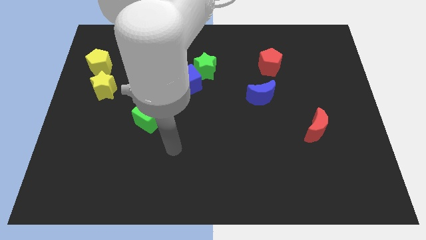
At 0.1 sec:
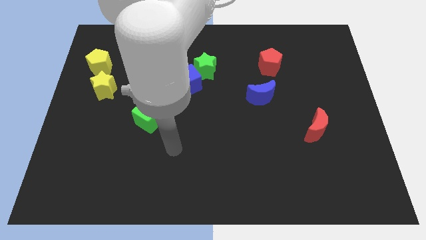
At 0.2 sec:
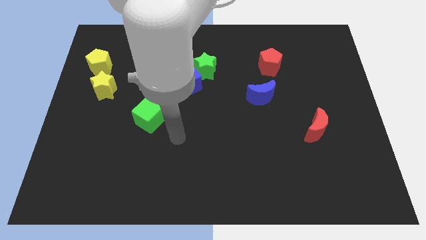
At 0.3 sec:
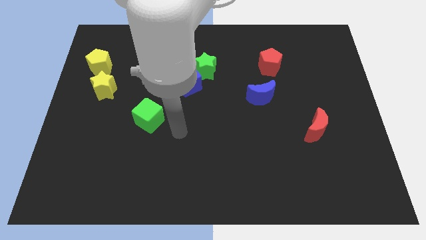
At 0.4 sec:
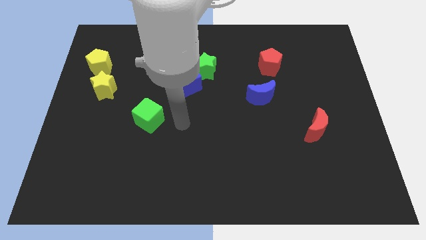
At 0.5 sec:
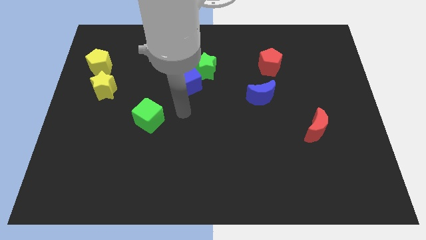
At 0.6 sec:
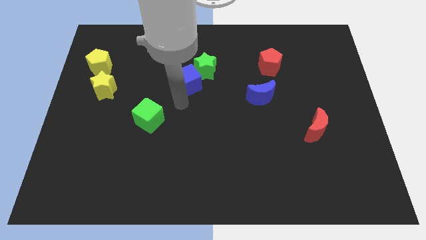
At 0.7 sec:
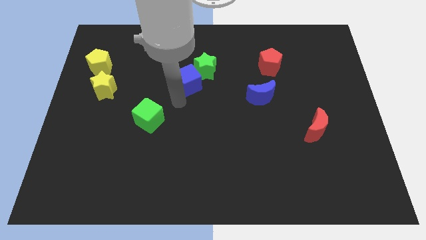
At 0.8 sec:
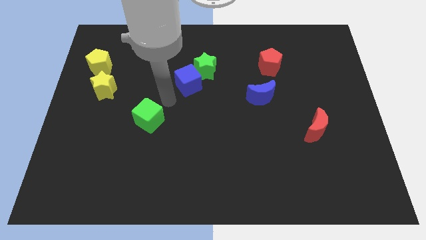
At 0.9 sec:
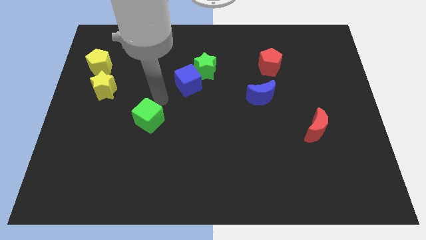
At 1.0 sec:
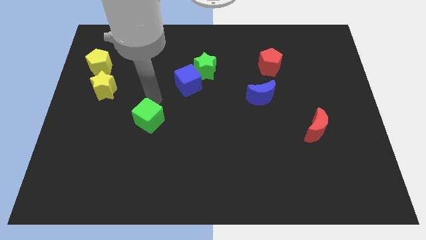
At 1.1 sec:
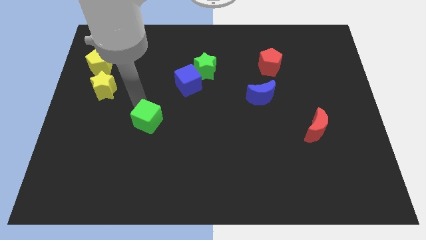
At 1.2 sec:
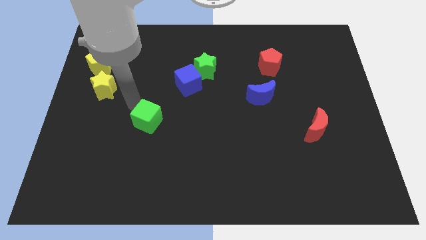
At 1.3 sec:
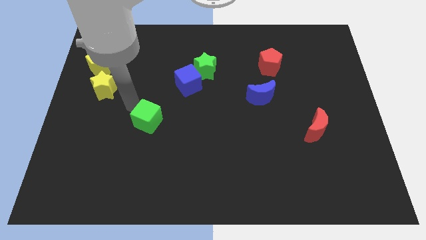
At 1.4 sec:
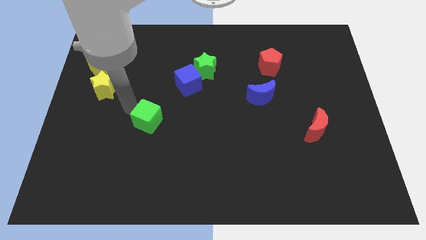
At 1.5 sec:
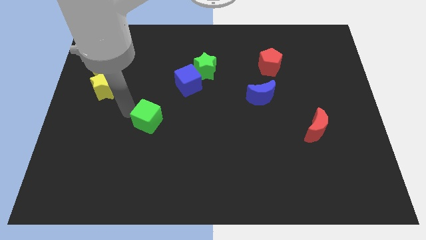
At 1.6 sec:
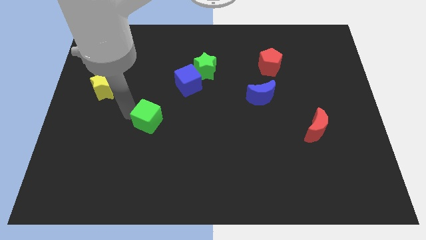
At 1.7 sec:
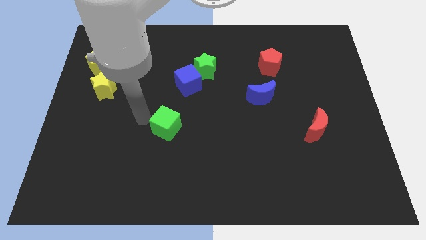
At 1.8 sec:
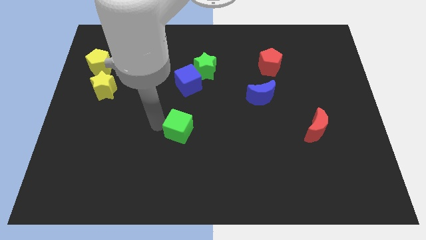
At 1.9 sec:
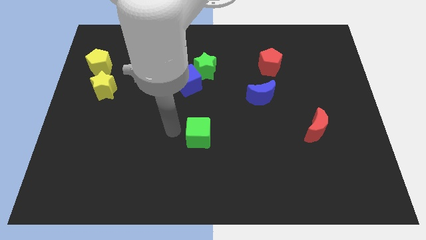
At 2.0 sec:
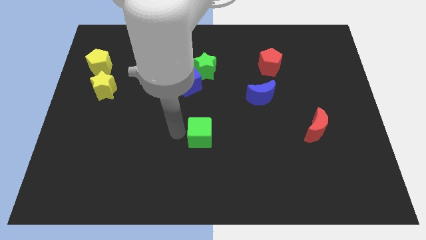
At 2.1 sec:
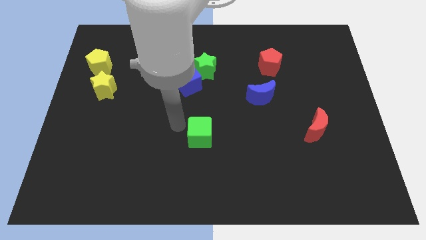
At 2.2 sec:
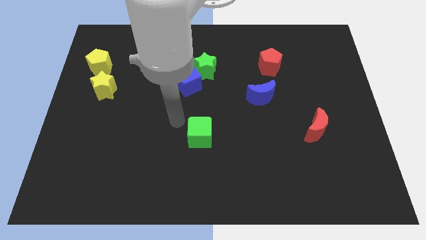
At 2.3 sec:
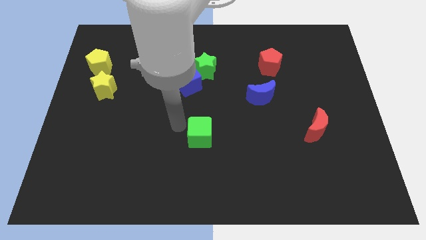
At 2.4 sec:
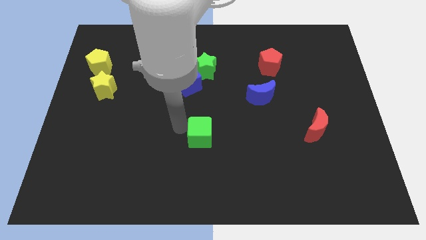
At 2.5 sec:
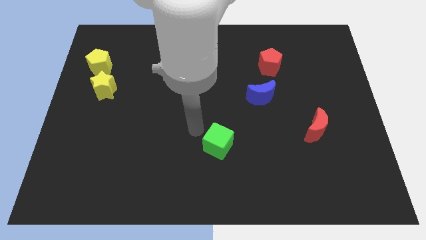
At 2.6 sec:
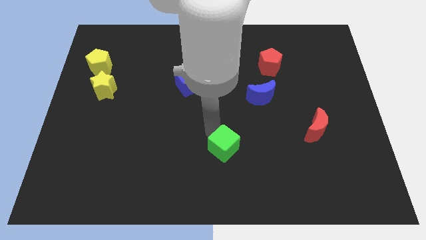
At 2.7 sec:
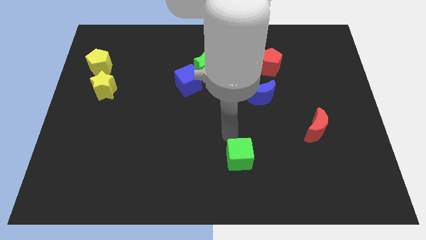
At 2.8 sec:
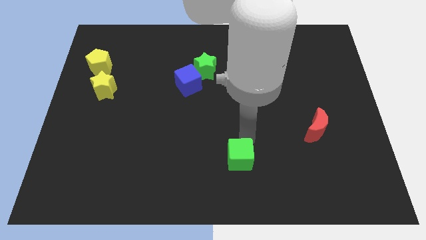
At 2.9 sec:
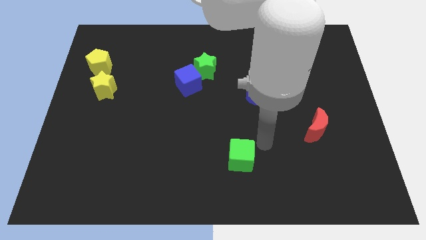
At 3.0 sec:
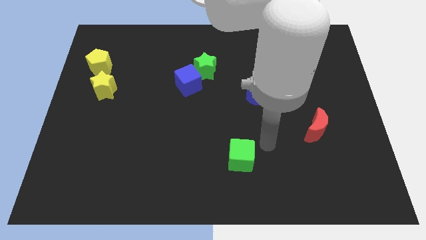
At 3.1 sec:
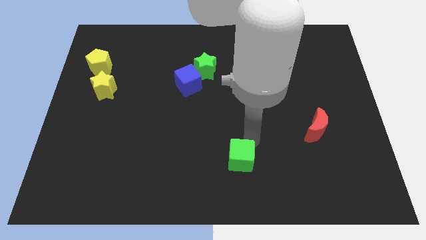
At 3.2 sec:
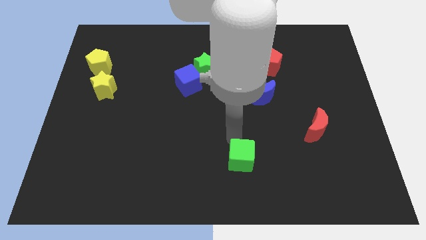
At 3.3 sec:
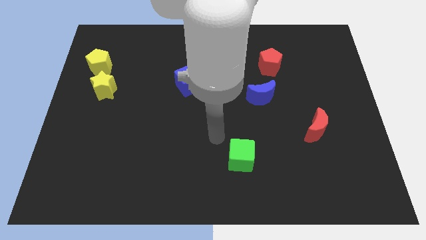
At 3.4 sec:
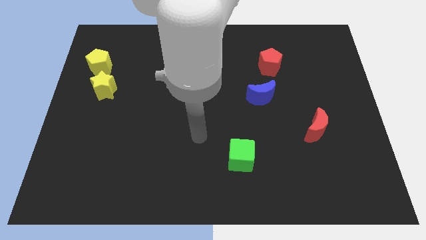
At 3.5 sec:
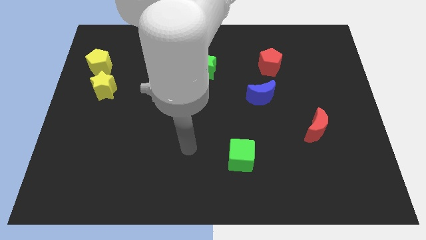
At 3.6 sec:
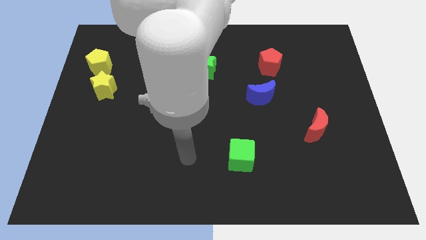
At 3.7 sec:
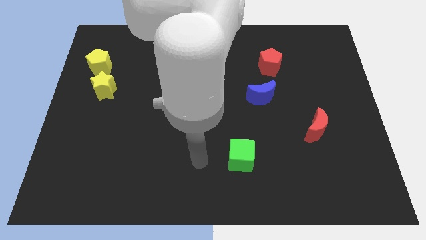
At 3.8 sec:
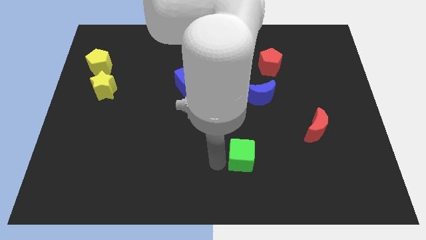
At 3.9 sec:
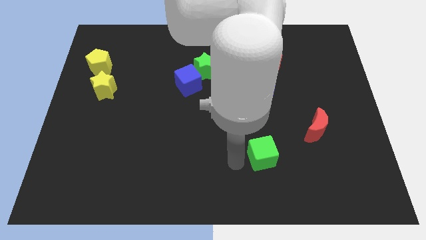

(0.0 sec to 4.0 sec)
slide the green cube vertical to the blue crescent

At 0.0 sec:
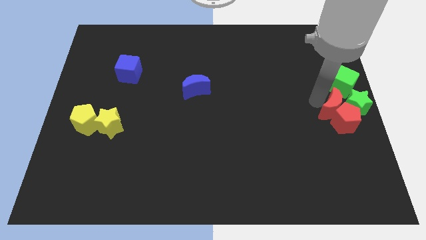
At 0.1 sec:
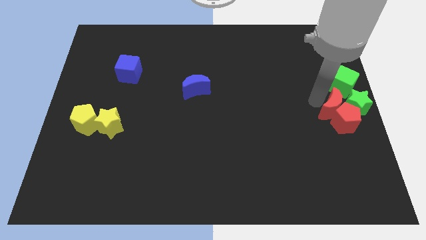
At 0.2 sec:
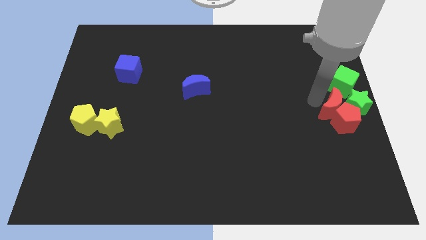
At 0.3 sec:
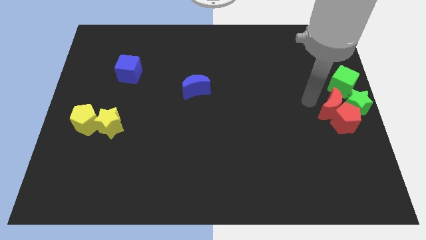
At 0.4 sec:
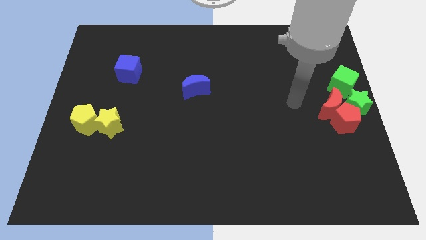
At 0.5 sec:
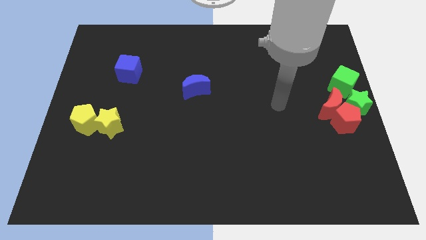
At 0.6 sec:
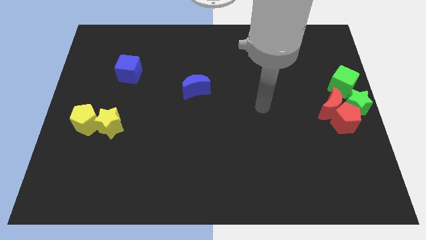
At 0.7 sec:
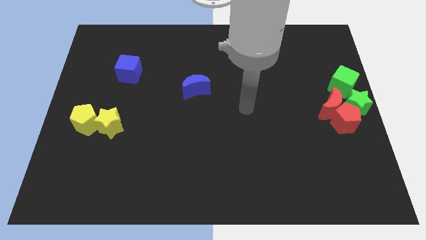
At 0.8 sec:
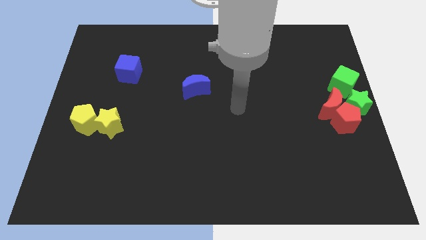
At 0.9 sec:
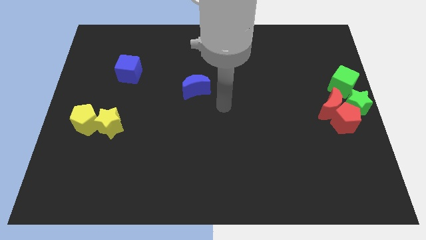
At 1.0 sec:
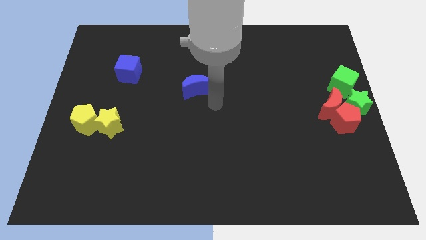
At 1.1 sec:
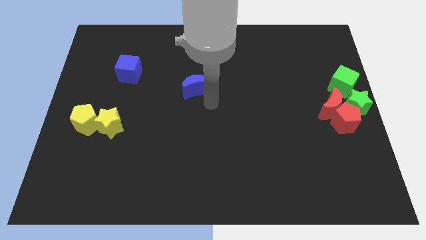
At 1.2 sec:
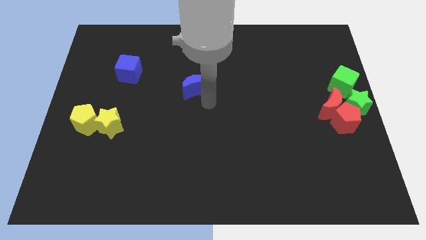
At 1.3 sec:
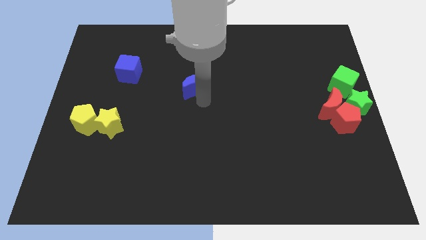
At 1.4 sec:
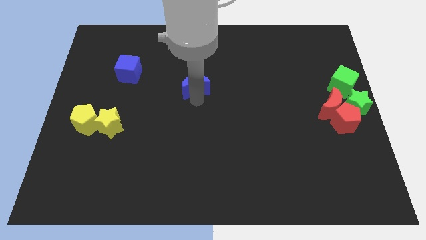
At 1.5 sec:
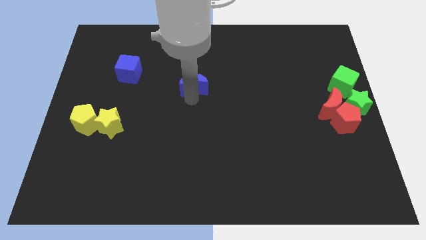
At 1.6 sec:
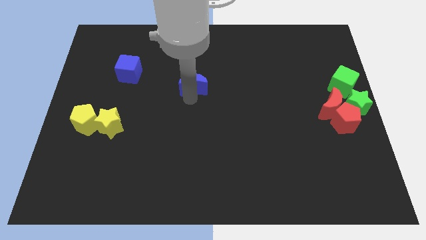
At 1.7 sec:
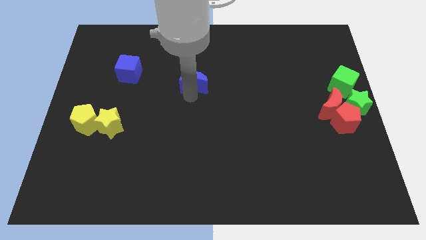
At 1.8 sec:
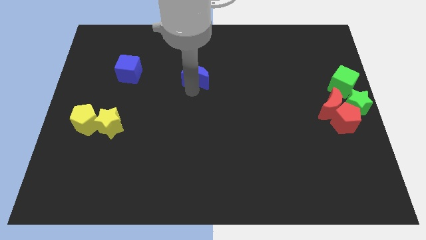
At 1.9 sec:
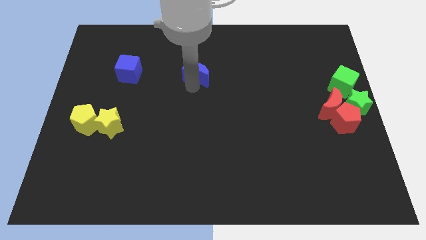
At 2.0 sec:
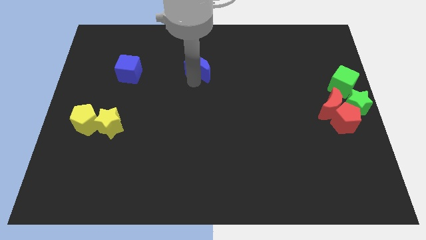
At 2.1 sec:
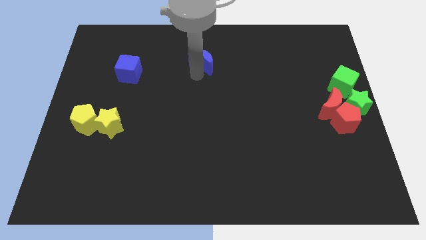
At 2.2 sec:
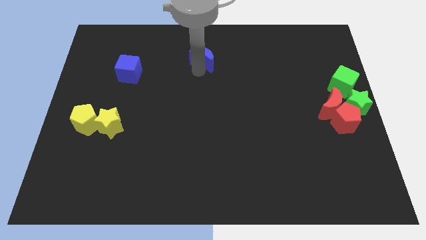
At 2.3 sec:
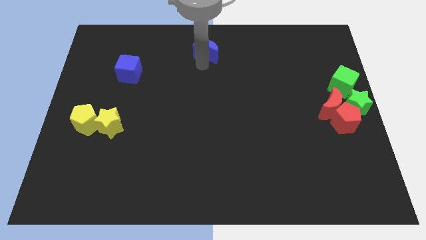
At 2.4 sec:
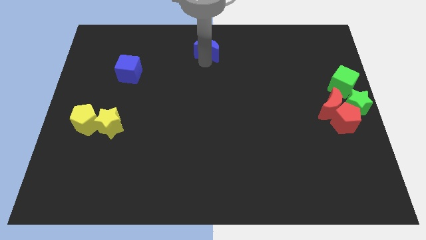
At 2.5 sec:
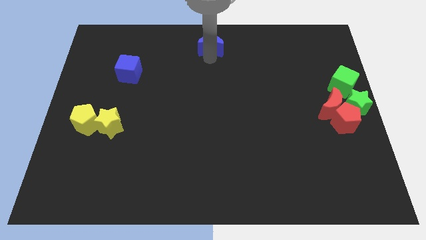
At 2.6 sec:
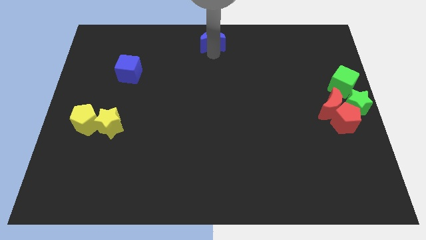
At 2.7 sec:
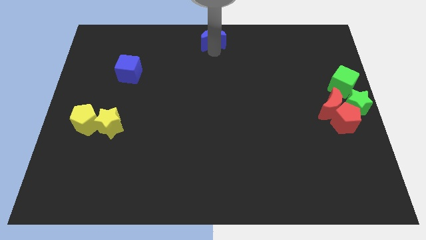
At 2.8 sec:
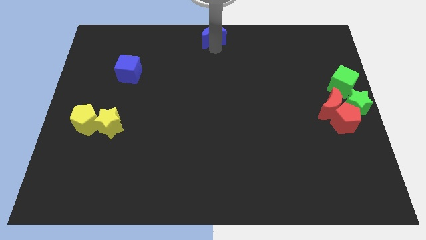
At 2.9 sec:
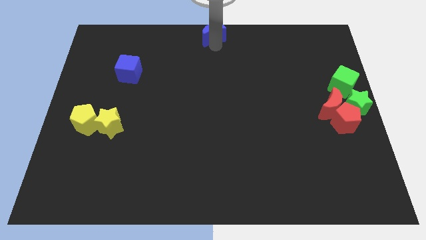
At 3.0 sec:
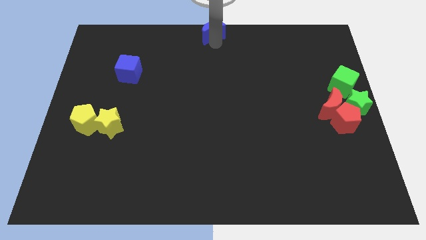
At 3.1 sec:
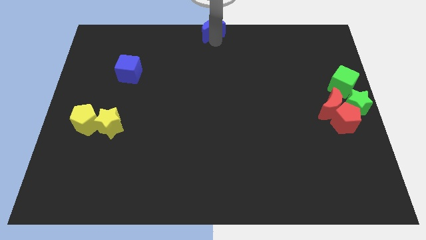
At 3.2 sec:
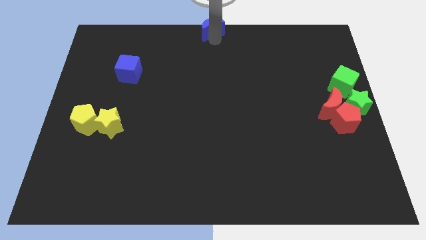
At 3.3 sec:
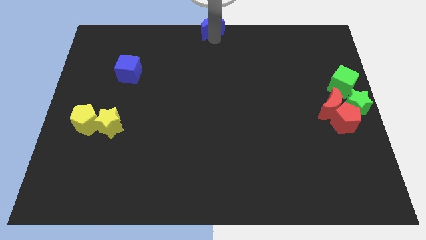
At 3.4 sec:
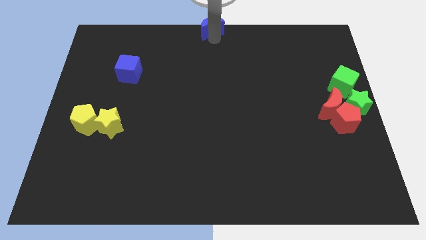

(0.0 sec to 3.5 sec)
push blue crescent towards top middle of the board

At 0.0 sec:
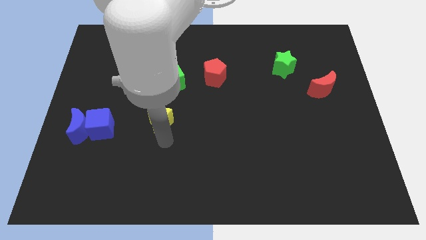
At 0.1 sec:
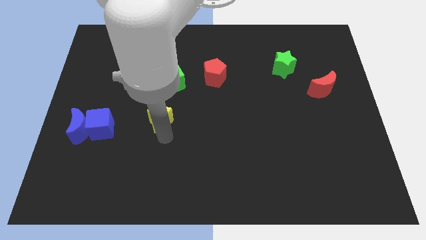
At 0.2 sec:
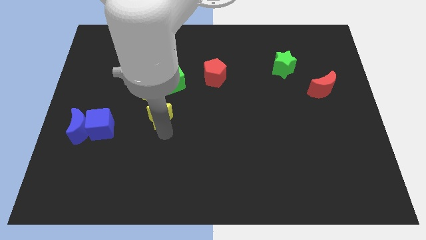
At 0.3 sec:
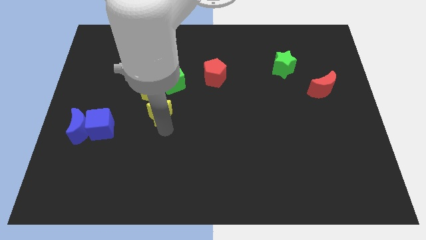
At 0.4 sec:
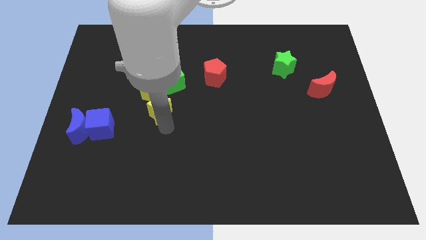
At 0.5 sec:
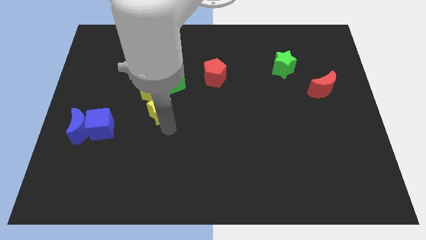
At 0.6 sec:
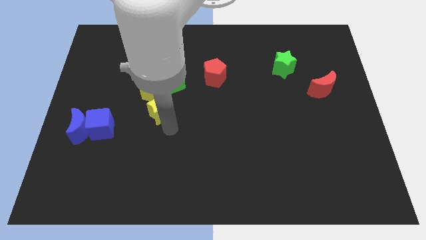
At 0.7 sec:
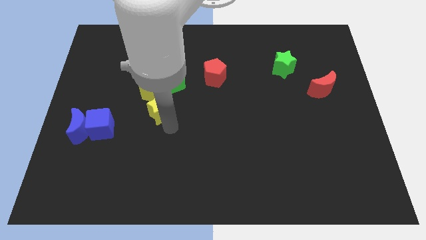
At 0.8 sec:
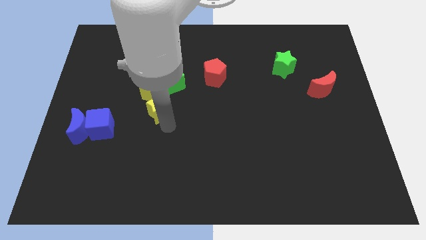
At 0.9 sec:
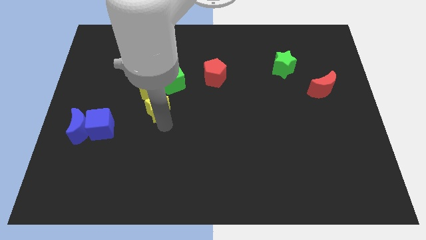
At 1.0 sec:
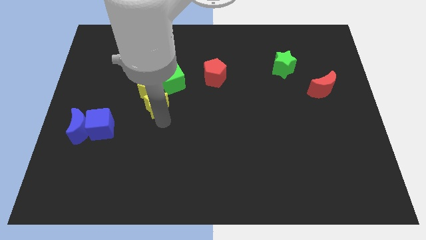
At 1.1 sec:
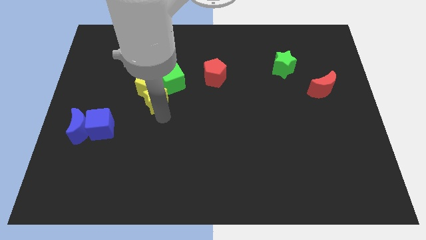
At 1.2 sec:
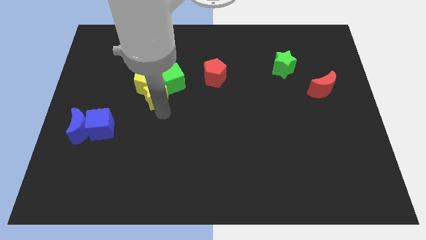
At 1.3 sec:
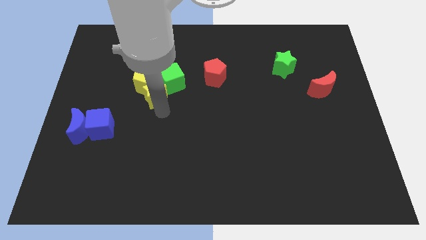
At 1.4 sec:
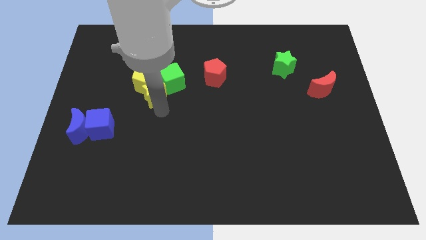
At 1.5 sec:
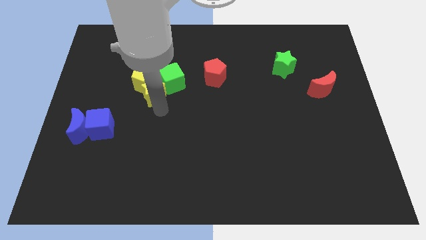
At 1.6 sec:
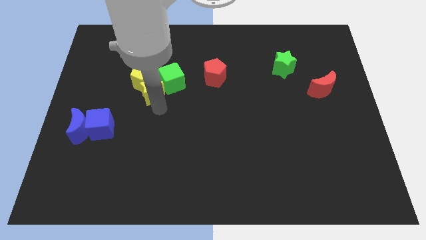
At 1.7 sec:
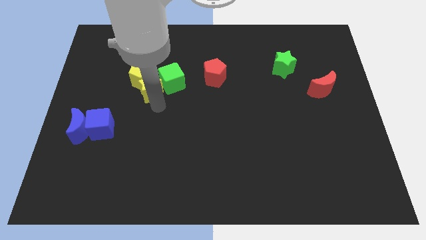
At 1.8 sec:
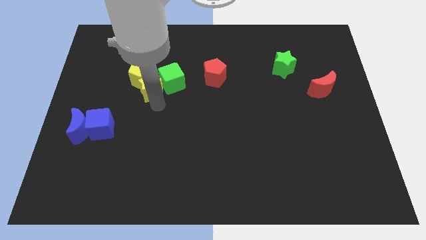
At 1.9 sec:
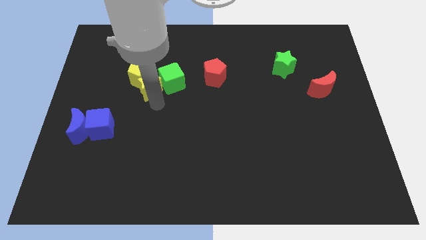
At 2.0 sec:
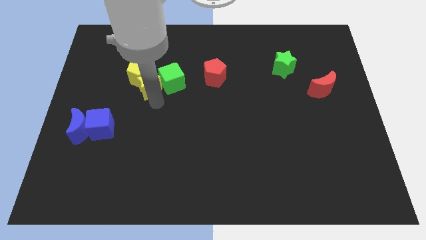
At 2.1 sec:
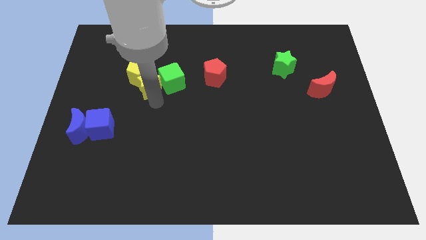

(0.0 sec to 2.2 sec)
move yellow star below the yellow pentagon
